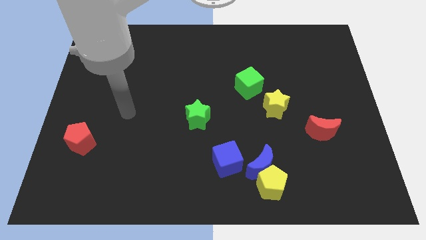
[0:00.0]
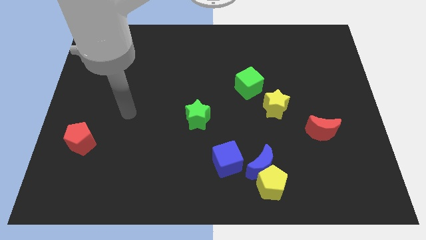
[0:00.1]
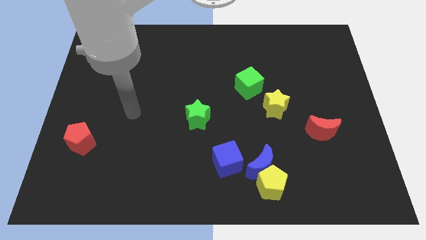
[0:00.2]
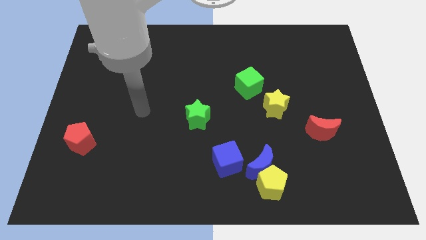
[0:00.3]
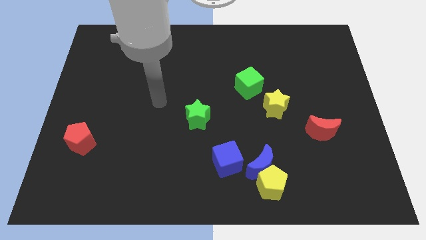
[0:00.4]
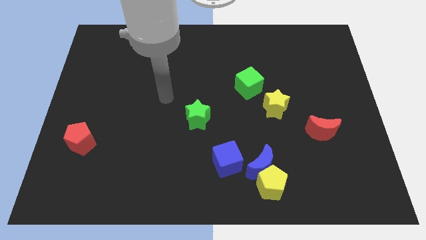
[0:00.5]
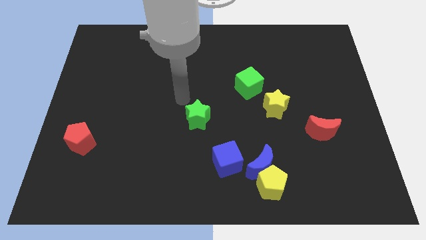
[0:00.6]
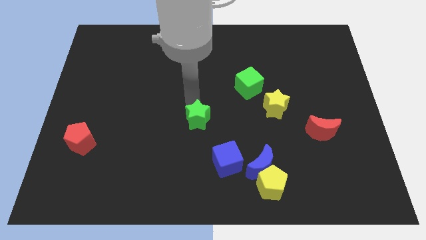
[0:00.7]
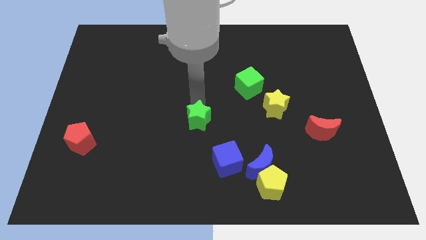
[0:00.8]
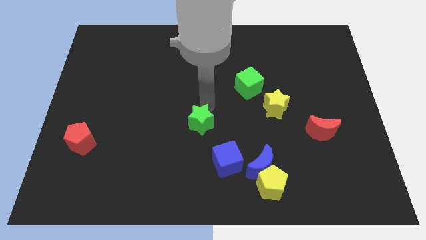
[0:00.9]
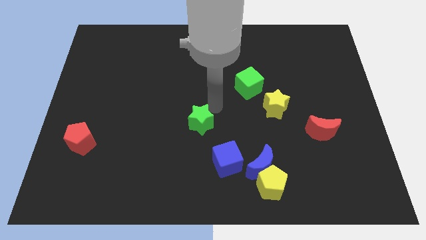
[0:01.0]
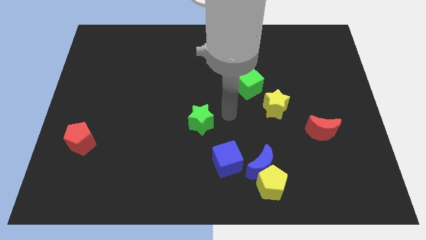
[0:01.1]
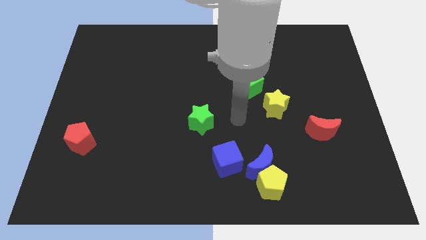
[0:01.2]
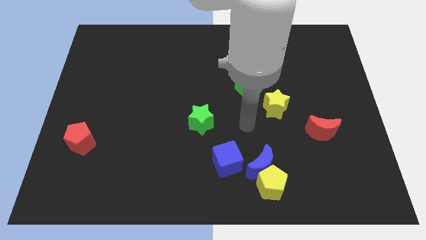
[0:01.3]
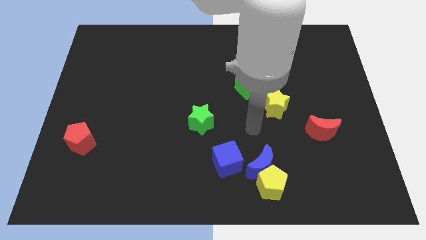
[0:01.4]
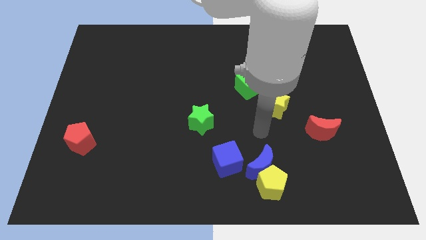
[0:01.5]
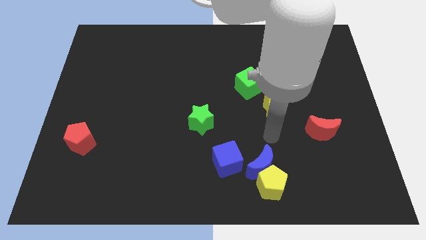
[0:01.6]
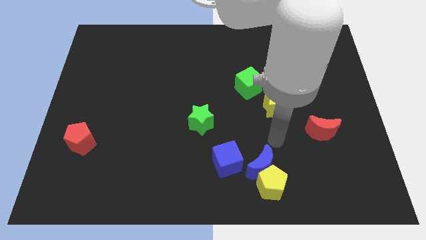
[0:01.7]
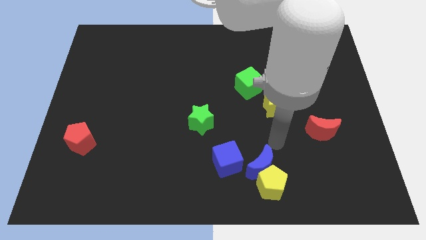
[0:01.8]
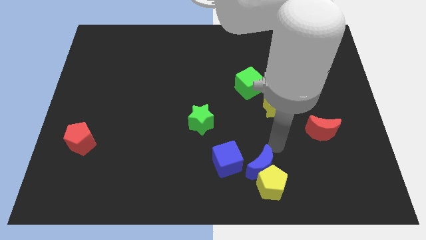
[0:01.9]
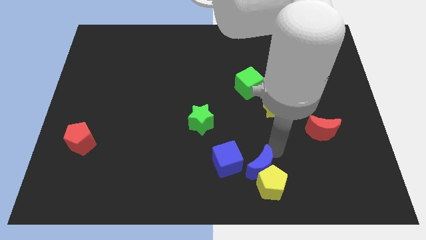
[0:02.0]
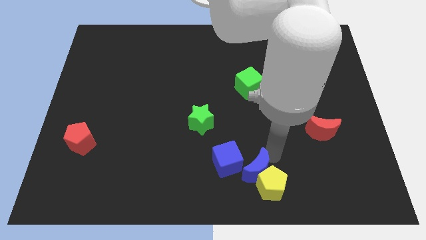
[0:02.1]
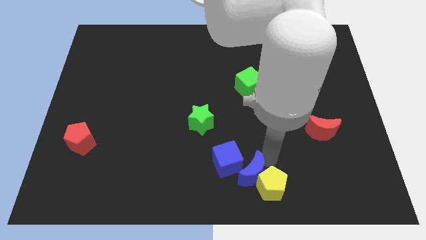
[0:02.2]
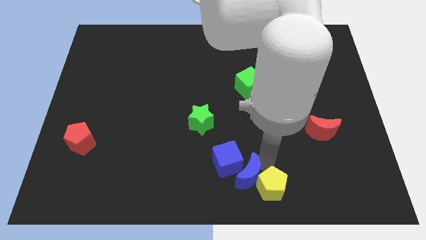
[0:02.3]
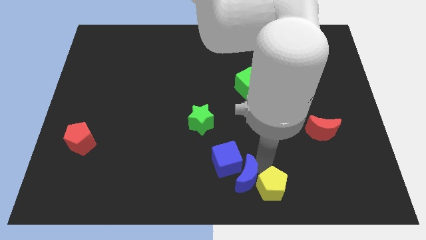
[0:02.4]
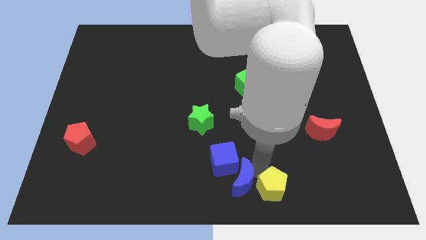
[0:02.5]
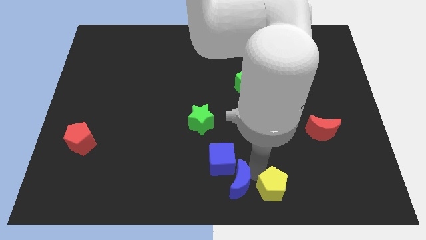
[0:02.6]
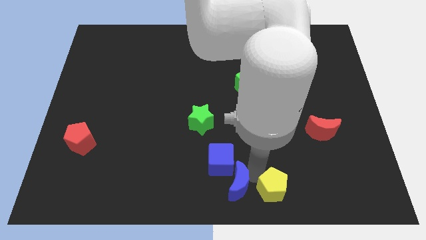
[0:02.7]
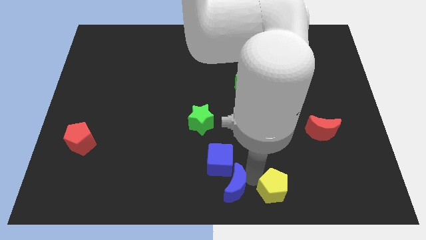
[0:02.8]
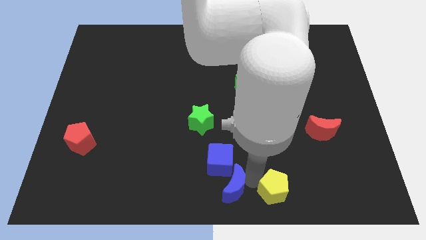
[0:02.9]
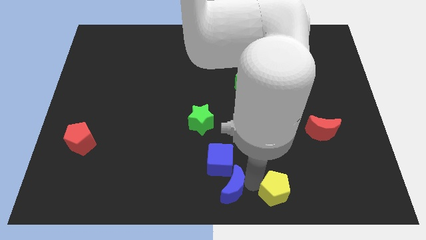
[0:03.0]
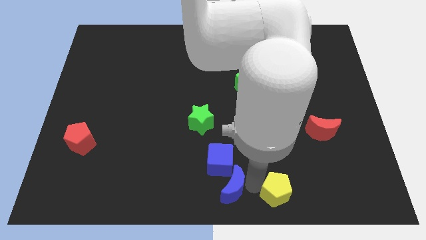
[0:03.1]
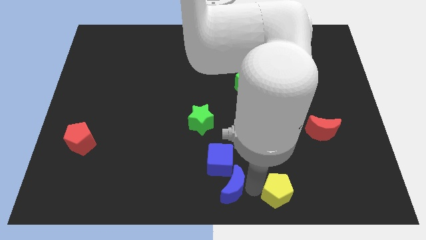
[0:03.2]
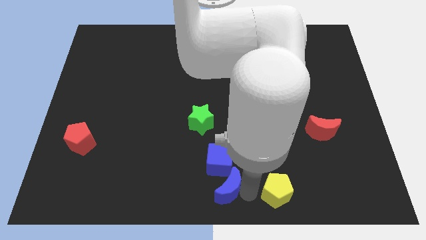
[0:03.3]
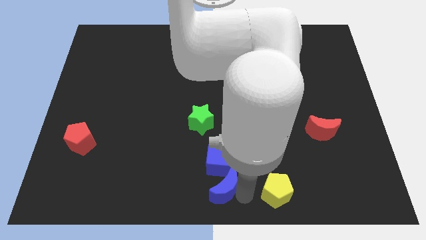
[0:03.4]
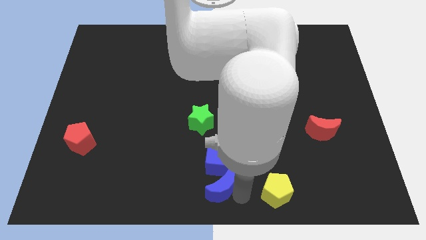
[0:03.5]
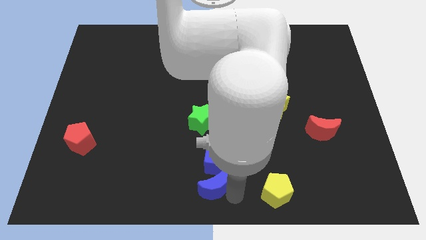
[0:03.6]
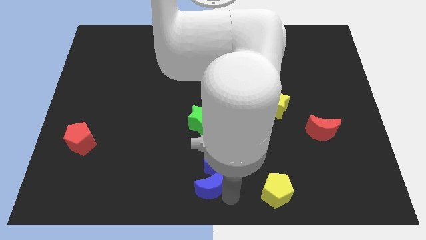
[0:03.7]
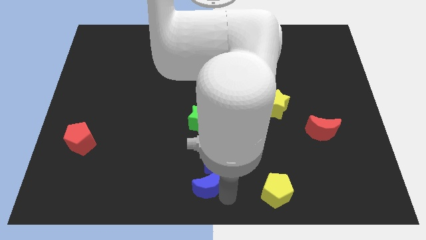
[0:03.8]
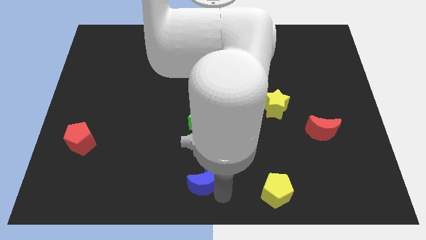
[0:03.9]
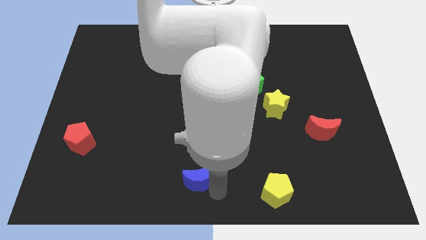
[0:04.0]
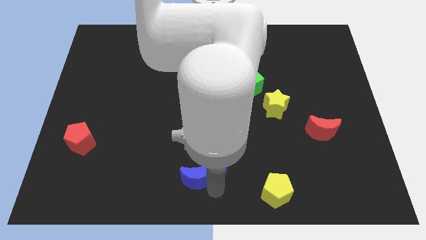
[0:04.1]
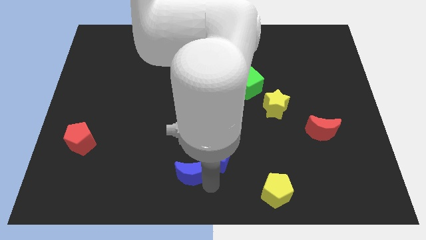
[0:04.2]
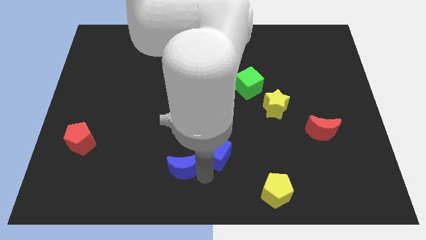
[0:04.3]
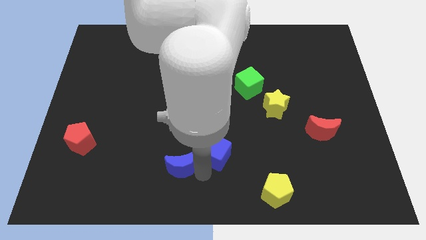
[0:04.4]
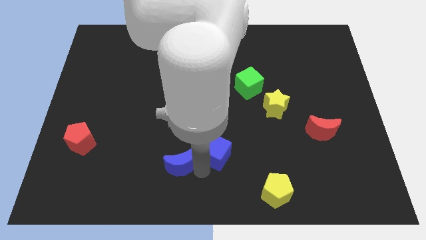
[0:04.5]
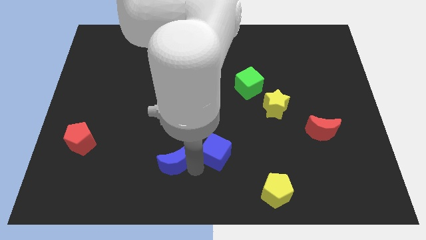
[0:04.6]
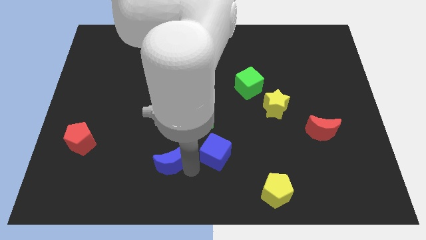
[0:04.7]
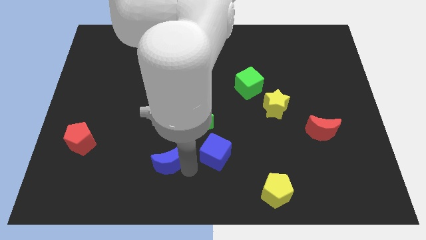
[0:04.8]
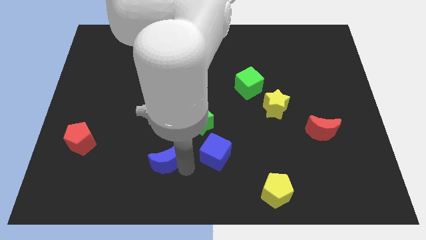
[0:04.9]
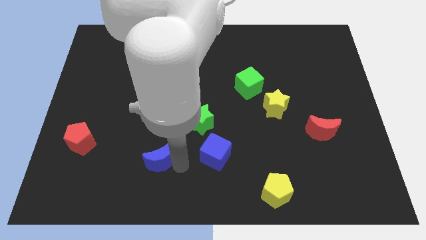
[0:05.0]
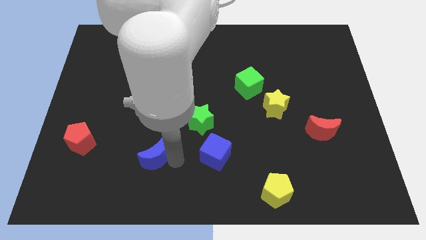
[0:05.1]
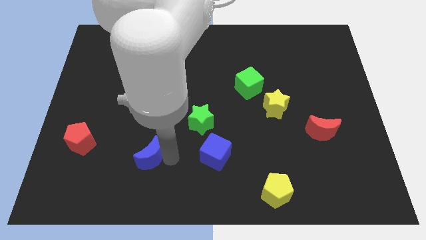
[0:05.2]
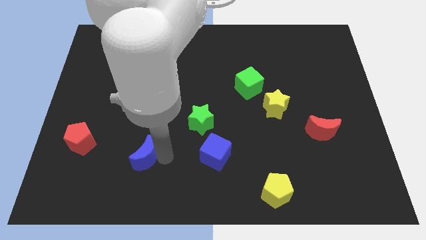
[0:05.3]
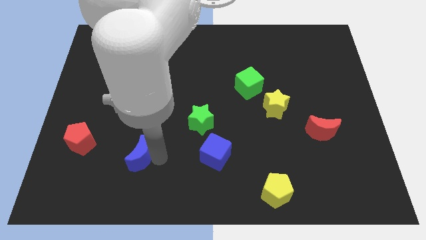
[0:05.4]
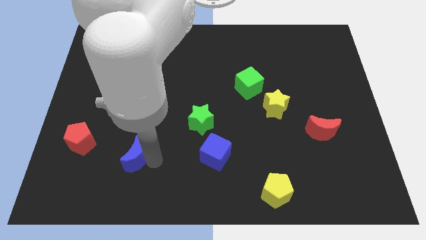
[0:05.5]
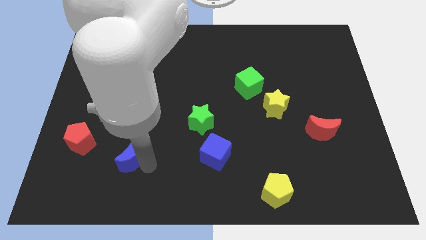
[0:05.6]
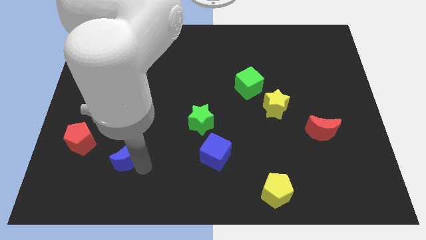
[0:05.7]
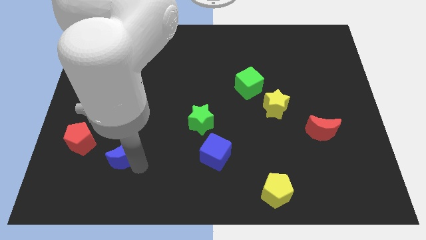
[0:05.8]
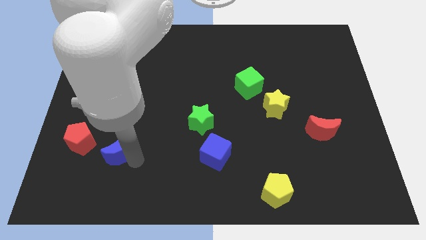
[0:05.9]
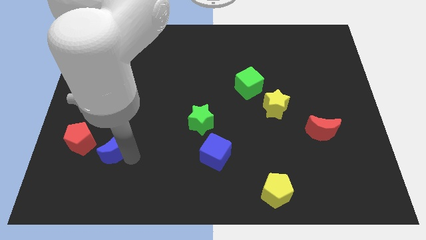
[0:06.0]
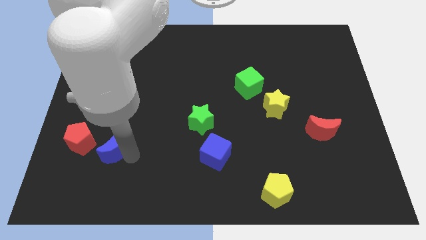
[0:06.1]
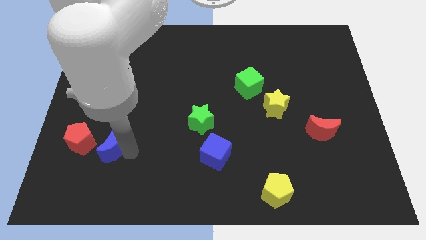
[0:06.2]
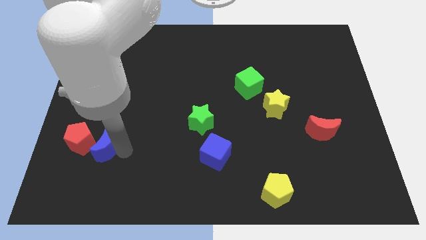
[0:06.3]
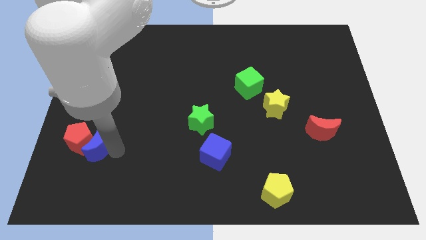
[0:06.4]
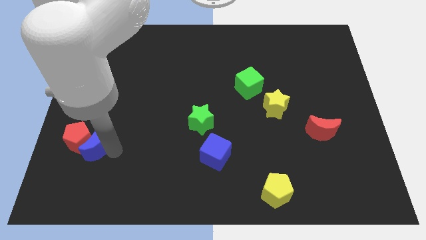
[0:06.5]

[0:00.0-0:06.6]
push the blue moon to the red pentagon

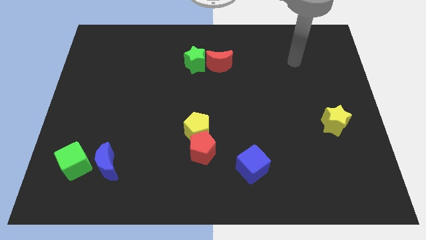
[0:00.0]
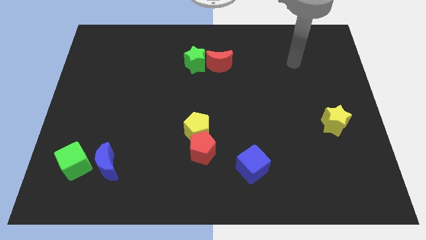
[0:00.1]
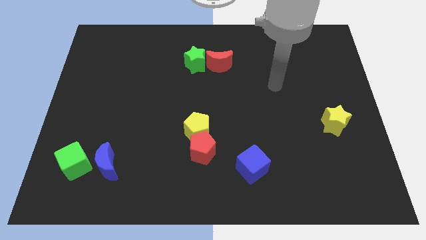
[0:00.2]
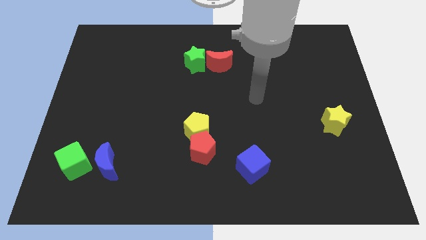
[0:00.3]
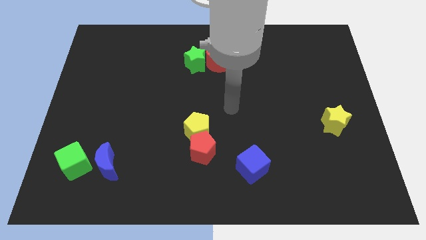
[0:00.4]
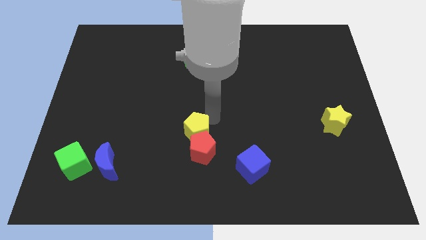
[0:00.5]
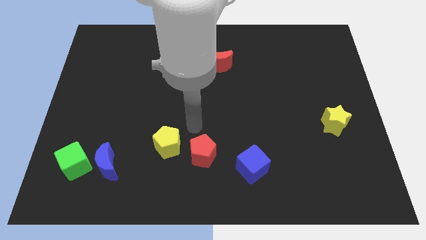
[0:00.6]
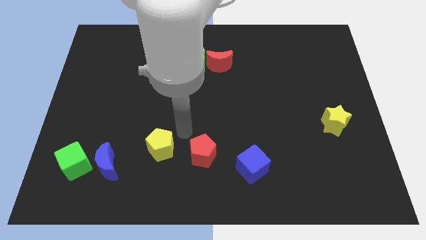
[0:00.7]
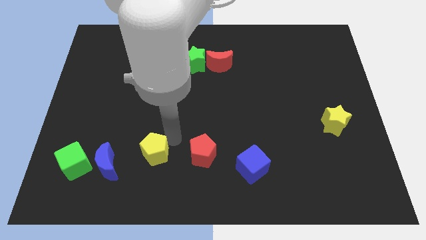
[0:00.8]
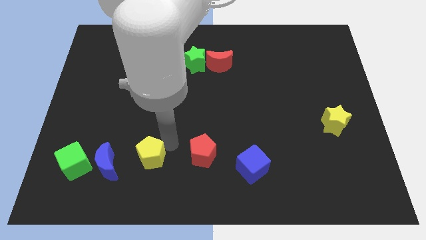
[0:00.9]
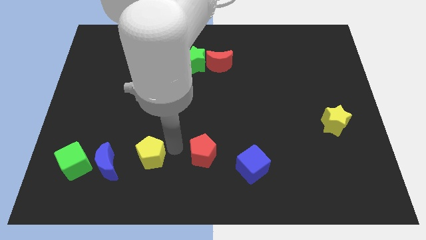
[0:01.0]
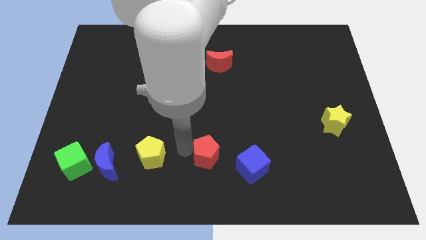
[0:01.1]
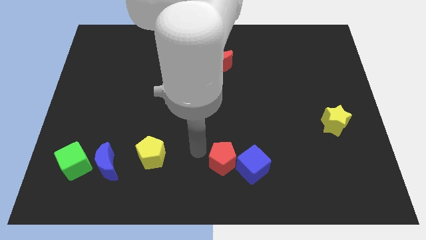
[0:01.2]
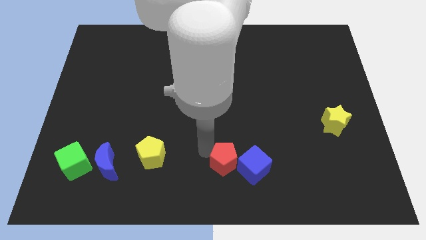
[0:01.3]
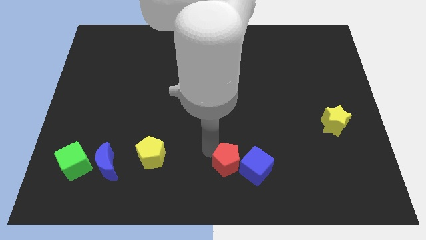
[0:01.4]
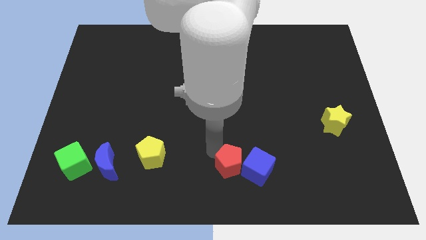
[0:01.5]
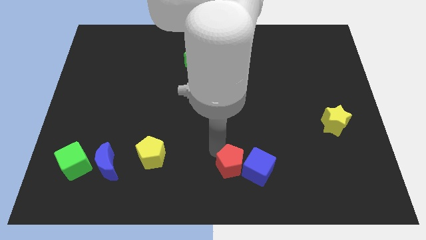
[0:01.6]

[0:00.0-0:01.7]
slide the red pentagon to the blue cube

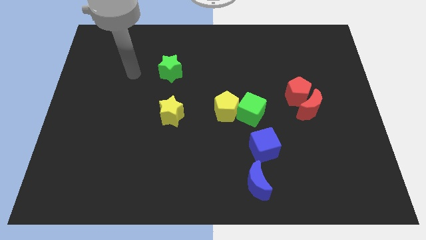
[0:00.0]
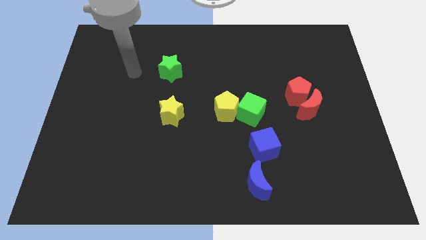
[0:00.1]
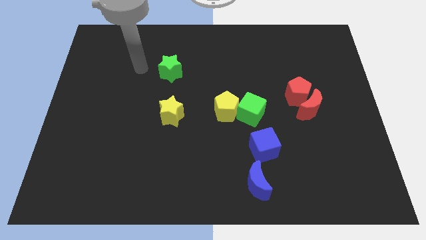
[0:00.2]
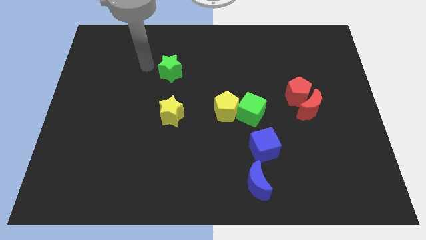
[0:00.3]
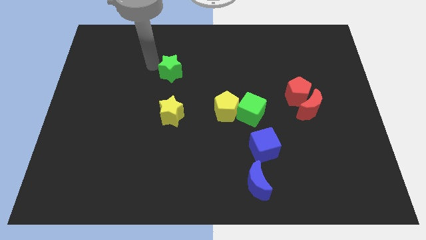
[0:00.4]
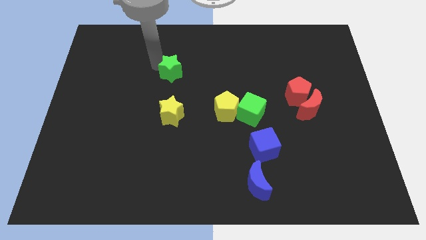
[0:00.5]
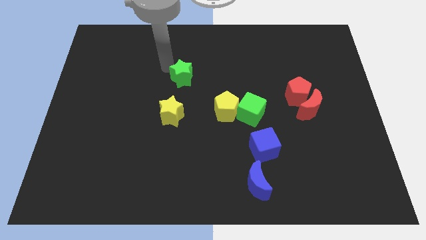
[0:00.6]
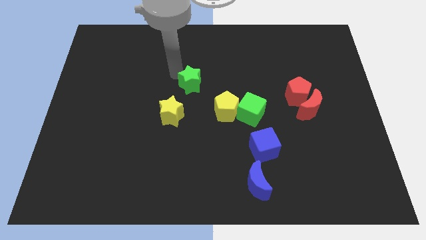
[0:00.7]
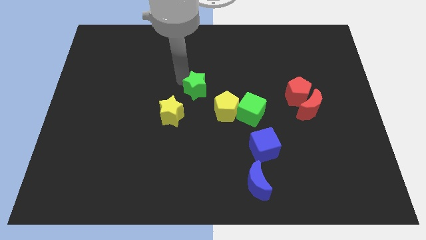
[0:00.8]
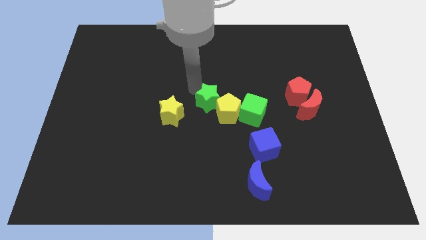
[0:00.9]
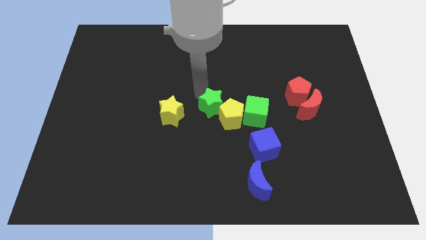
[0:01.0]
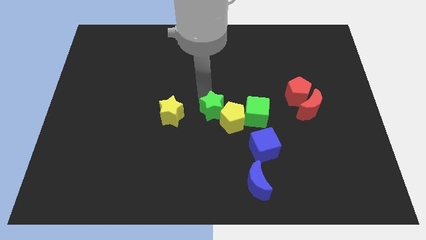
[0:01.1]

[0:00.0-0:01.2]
push the green star towards the yellow pentagon
